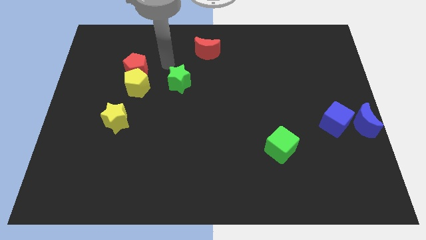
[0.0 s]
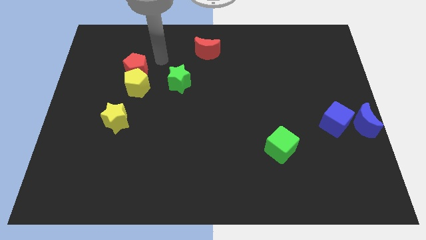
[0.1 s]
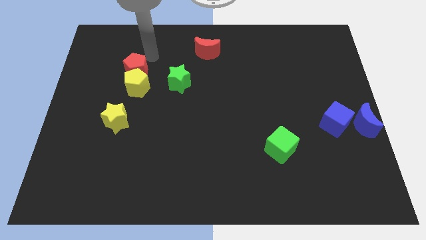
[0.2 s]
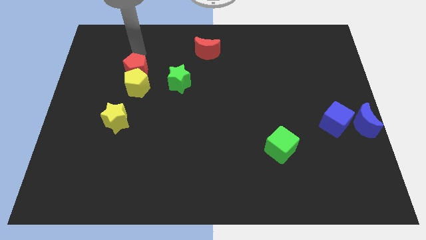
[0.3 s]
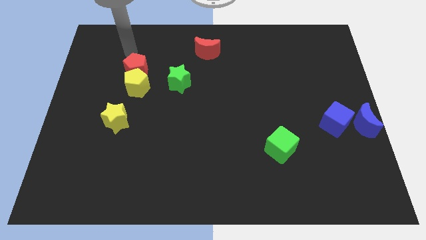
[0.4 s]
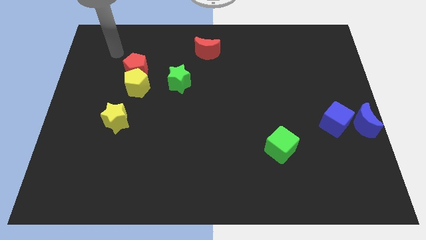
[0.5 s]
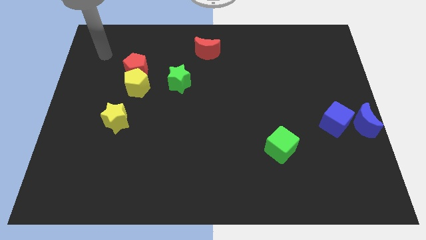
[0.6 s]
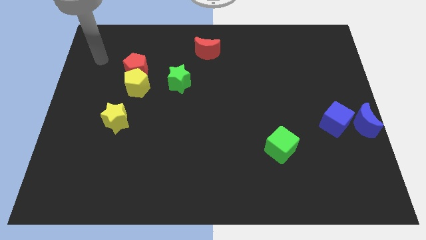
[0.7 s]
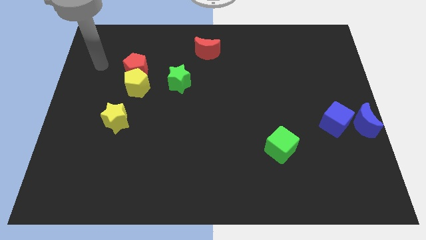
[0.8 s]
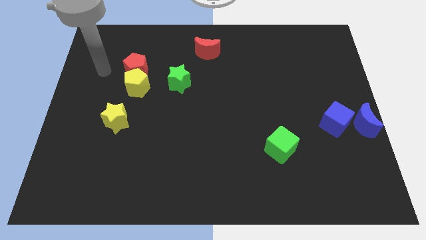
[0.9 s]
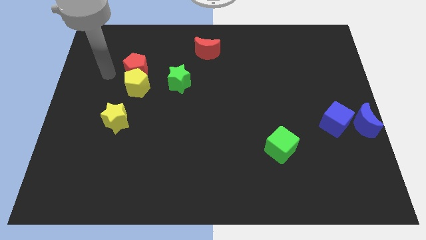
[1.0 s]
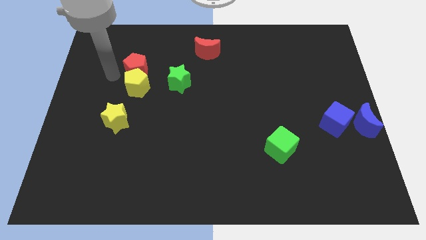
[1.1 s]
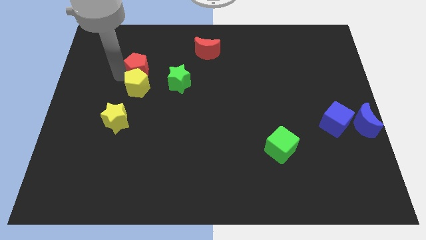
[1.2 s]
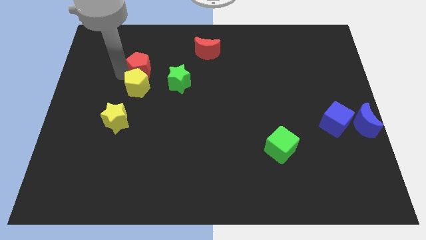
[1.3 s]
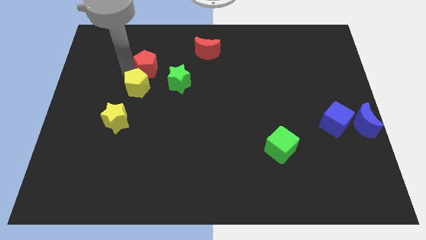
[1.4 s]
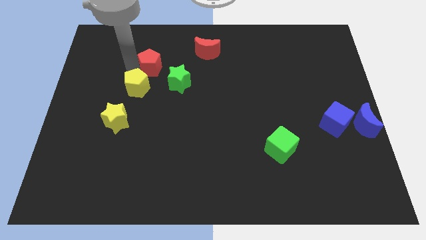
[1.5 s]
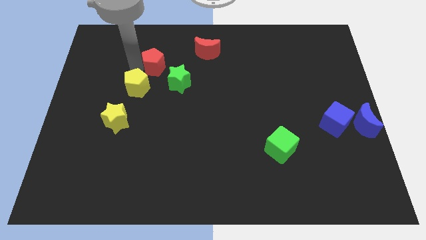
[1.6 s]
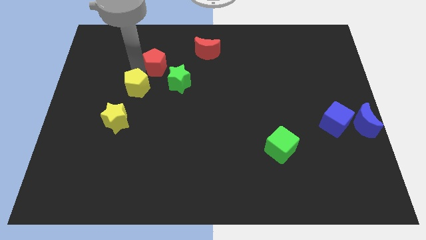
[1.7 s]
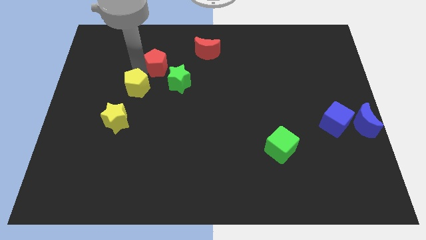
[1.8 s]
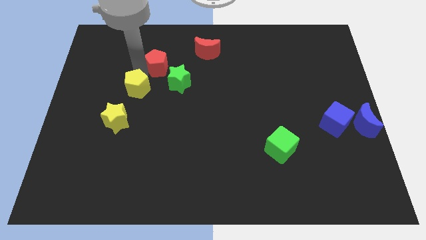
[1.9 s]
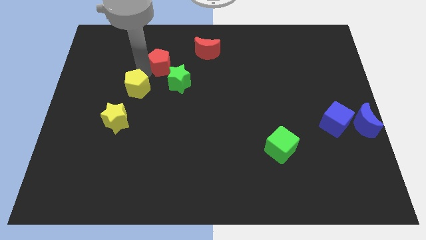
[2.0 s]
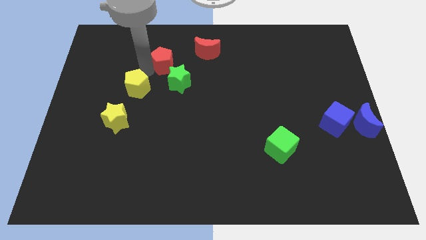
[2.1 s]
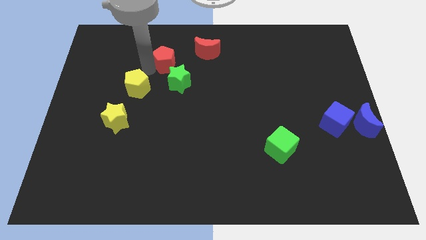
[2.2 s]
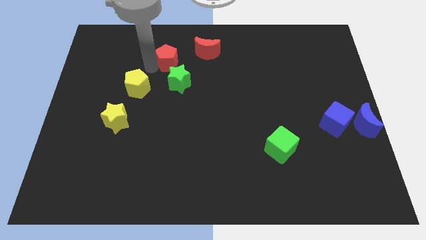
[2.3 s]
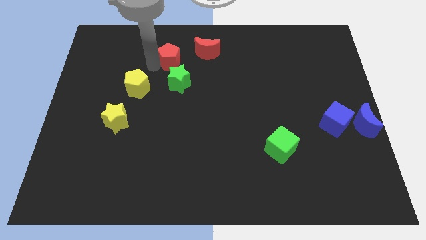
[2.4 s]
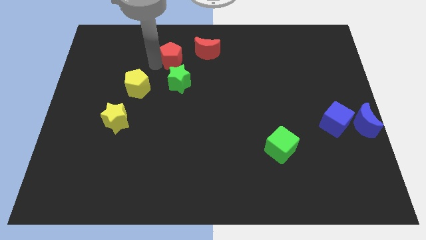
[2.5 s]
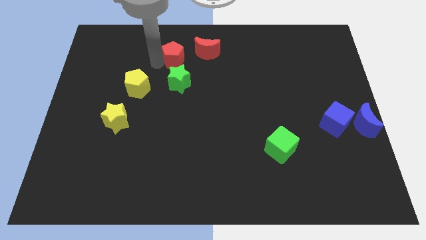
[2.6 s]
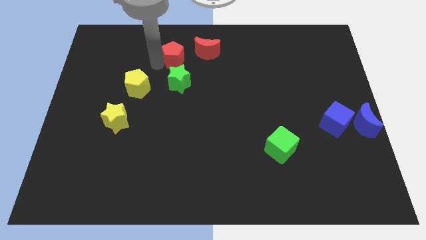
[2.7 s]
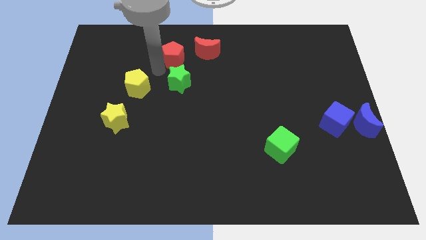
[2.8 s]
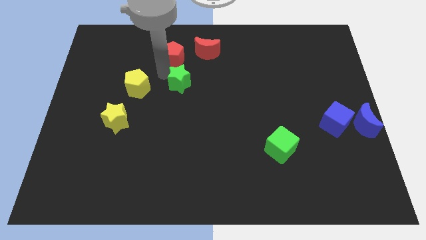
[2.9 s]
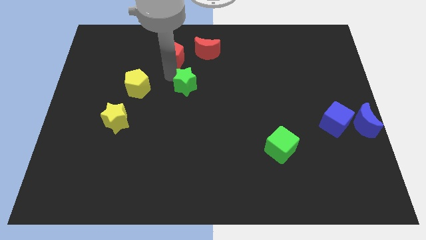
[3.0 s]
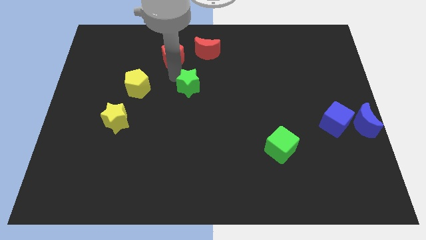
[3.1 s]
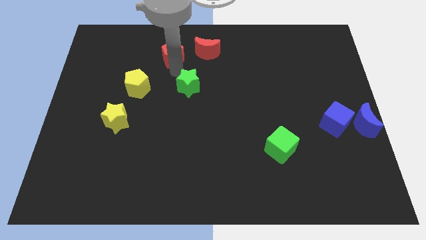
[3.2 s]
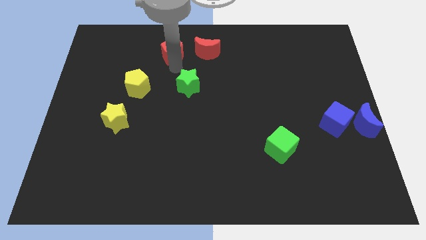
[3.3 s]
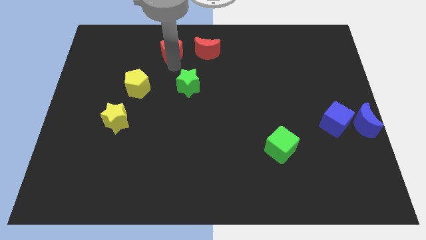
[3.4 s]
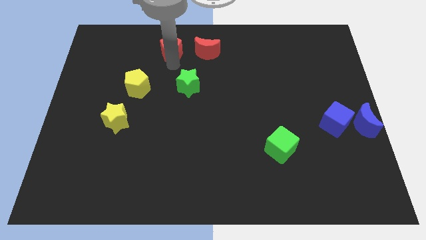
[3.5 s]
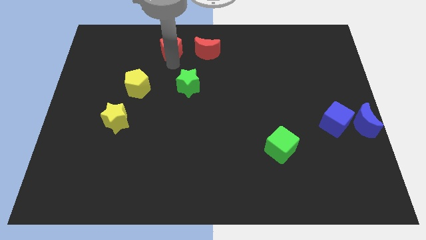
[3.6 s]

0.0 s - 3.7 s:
place the red pentagon to the left side of the red crescent

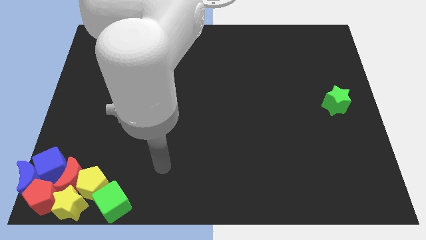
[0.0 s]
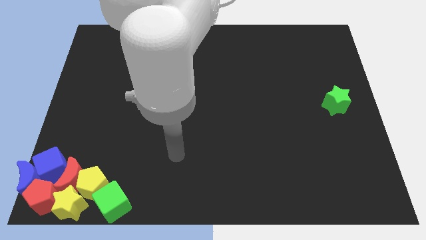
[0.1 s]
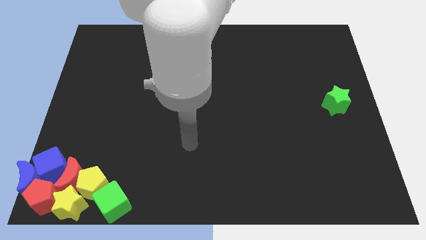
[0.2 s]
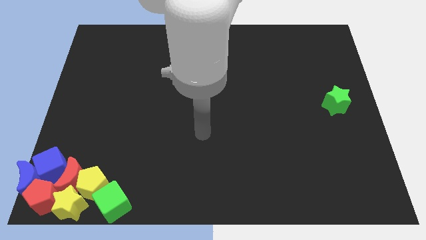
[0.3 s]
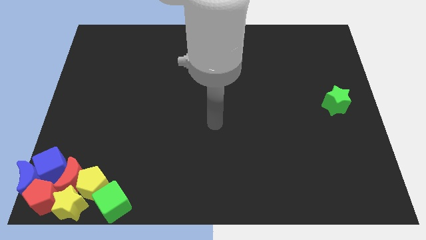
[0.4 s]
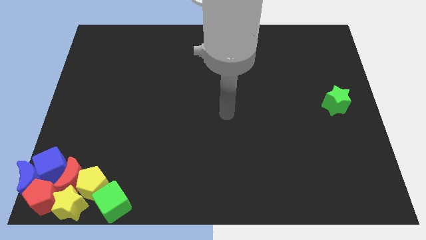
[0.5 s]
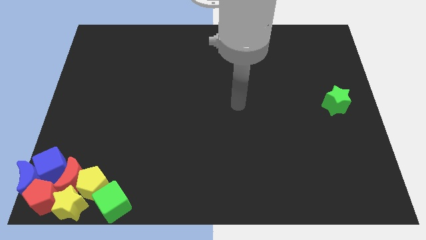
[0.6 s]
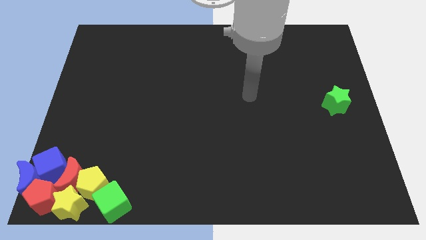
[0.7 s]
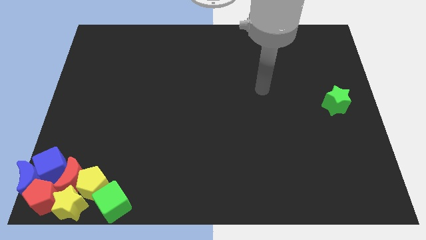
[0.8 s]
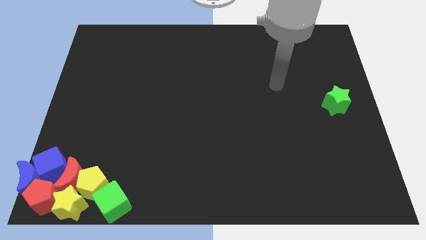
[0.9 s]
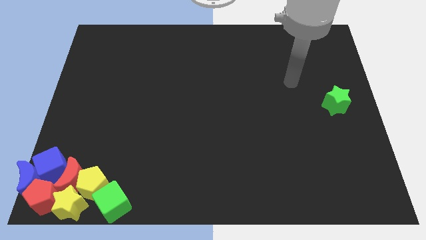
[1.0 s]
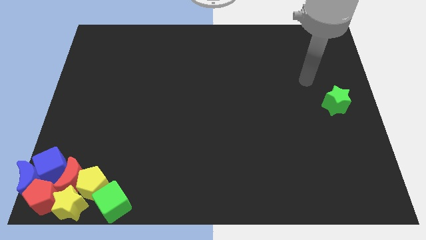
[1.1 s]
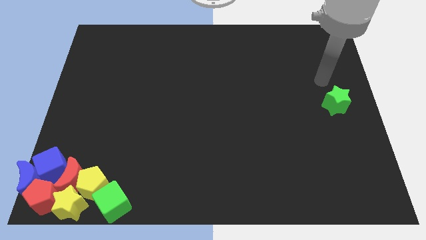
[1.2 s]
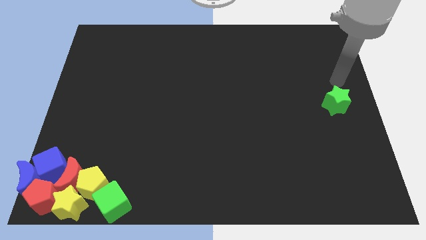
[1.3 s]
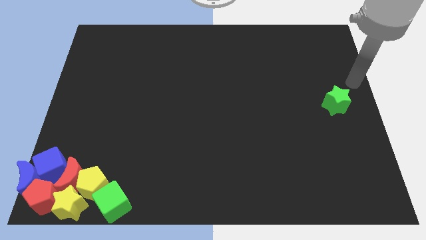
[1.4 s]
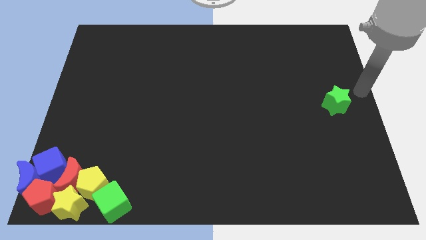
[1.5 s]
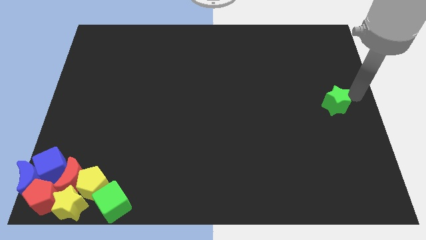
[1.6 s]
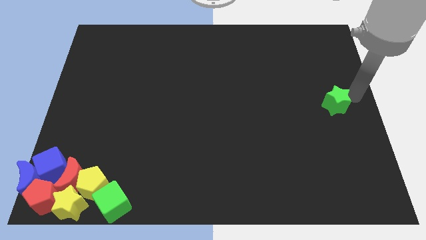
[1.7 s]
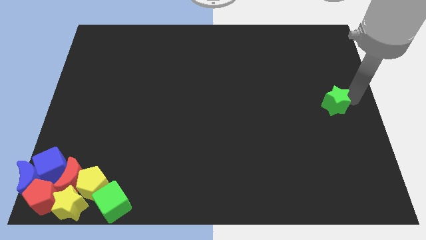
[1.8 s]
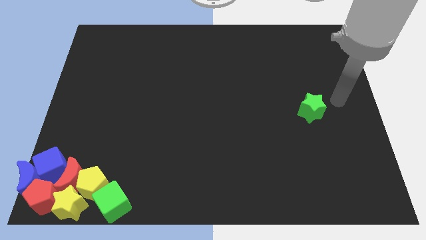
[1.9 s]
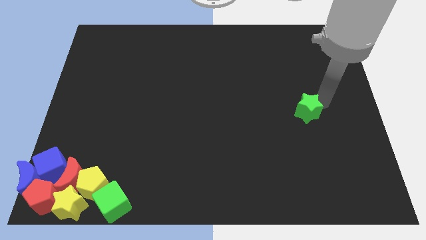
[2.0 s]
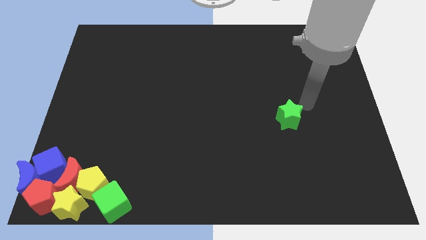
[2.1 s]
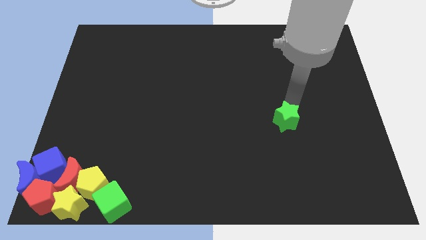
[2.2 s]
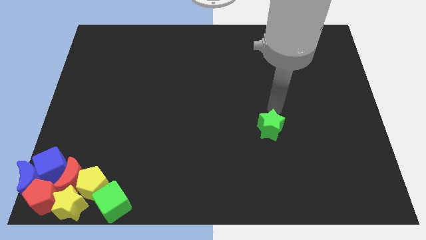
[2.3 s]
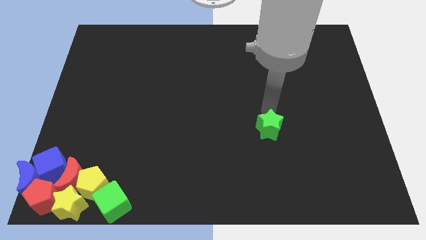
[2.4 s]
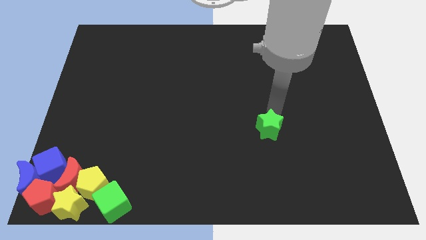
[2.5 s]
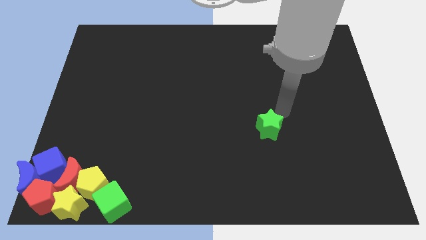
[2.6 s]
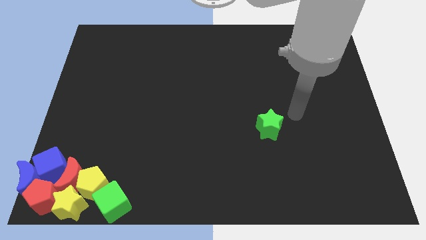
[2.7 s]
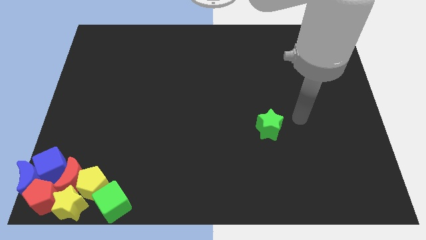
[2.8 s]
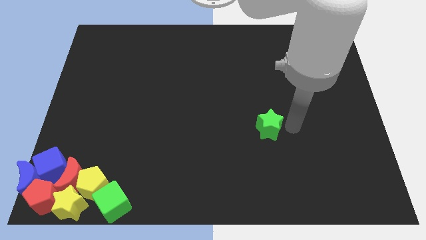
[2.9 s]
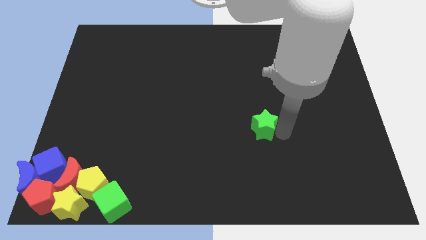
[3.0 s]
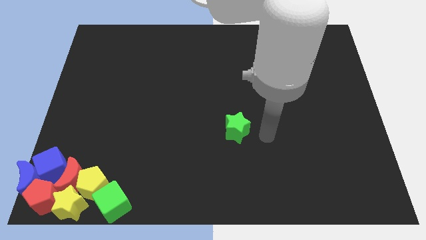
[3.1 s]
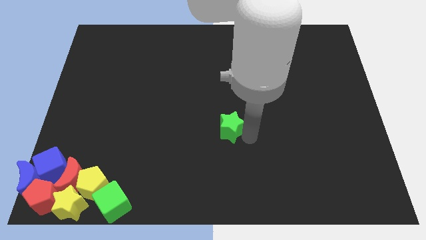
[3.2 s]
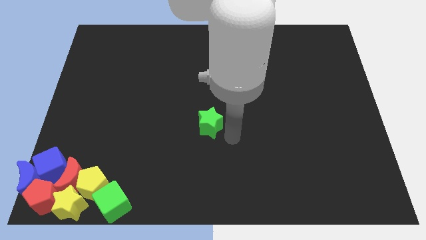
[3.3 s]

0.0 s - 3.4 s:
move the green star towards the center of the board

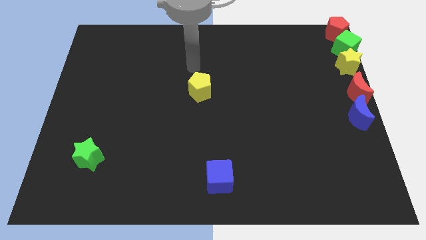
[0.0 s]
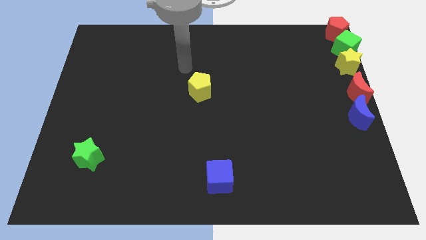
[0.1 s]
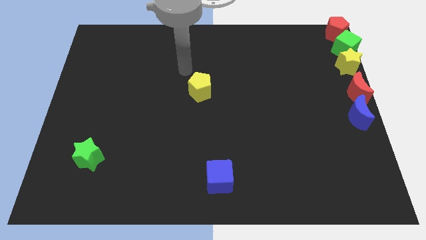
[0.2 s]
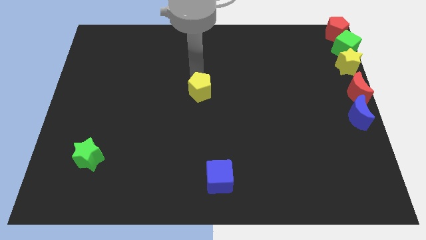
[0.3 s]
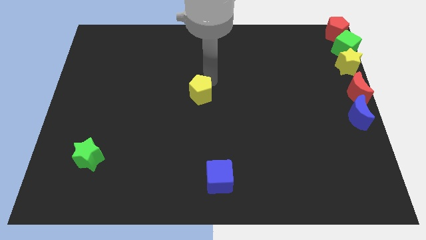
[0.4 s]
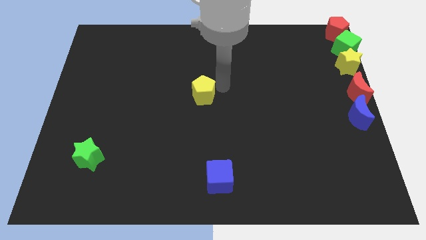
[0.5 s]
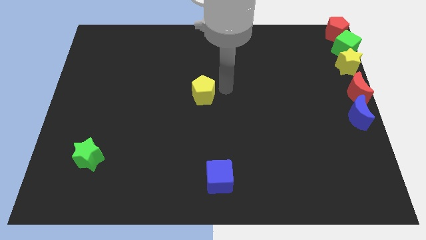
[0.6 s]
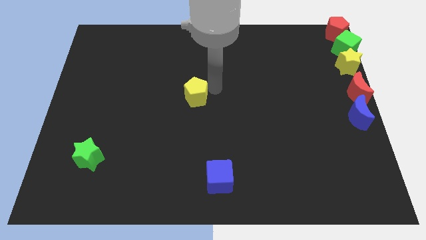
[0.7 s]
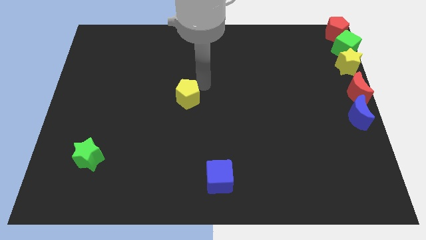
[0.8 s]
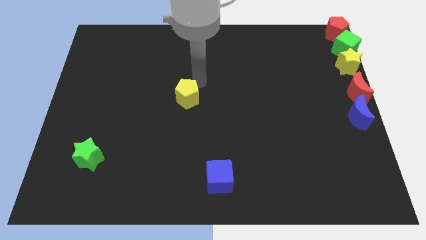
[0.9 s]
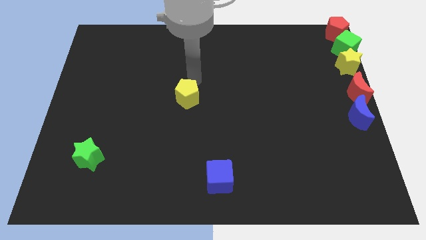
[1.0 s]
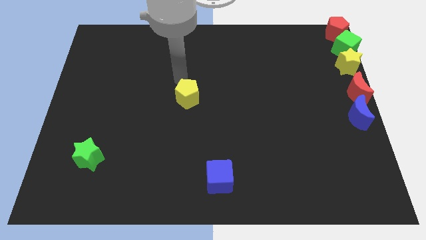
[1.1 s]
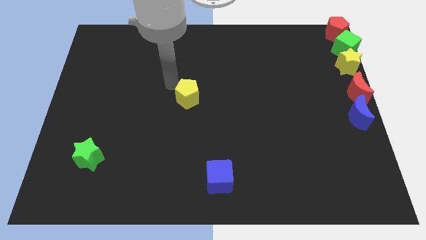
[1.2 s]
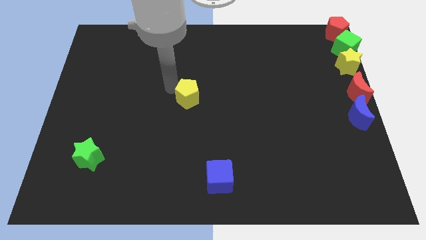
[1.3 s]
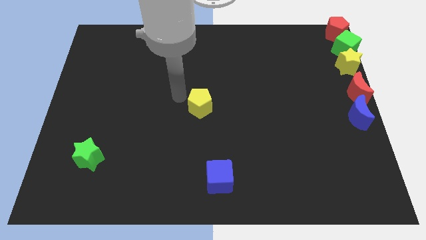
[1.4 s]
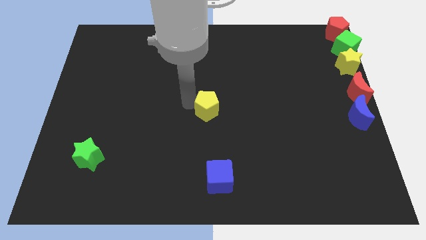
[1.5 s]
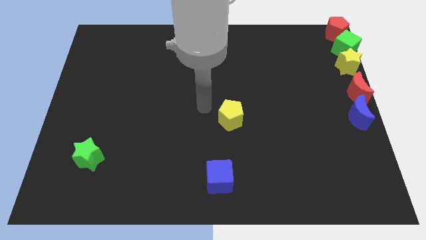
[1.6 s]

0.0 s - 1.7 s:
slide the yellow pentagon horizontally to the left side of the blue crescent
